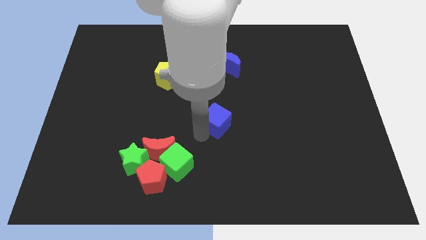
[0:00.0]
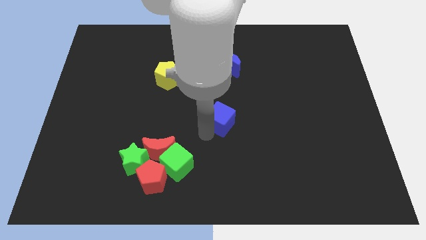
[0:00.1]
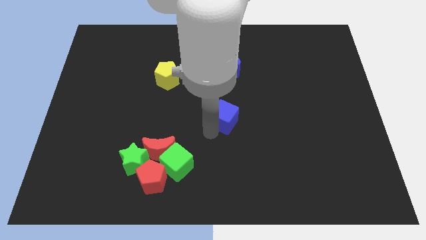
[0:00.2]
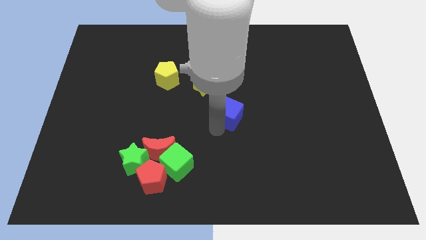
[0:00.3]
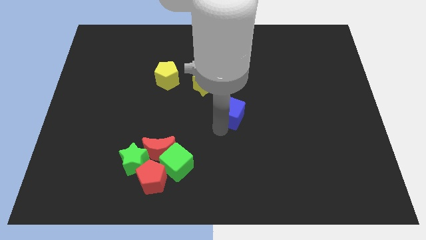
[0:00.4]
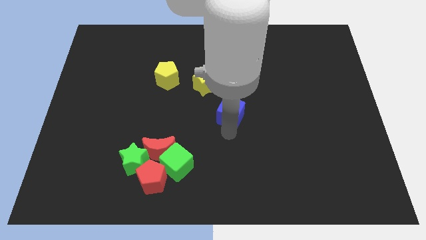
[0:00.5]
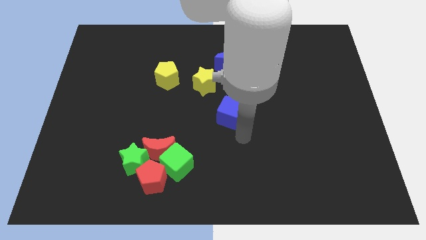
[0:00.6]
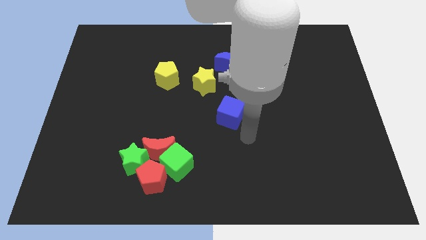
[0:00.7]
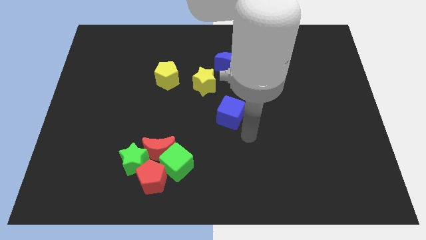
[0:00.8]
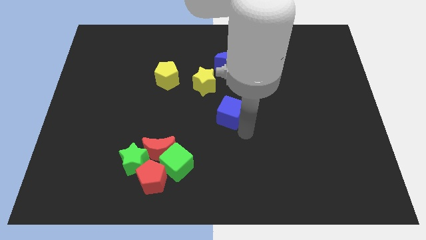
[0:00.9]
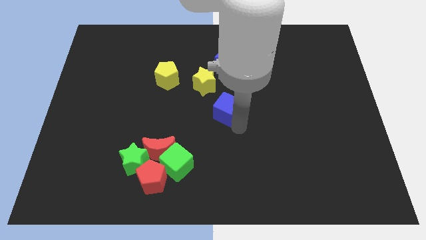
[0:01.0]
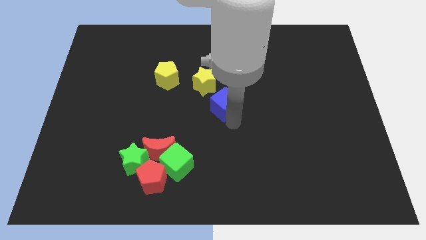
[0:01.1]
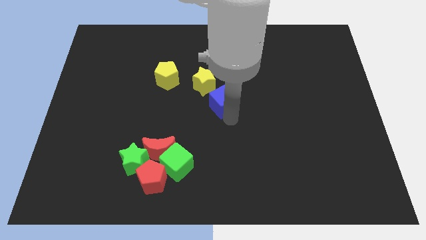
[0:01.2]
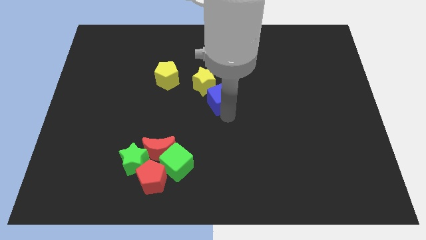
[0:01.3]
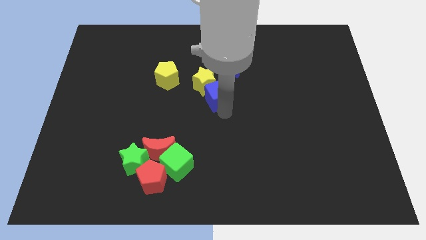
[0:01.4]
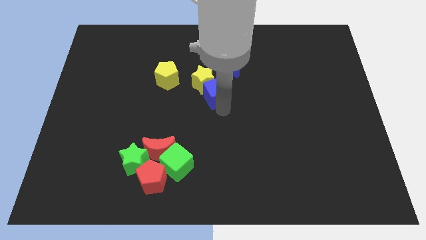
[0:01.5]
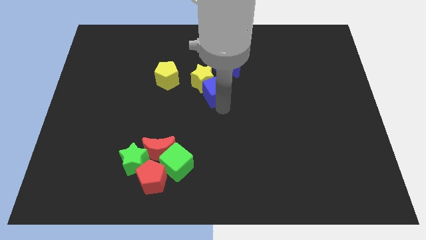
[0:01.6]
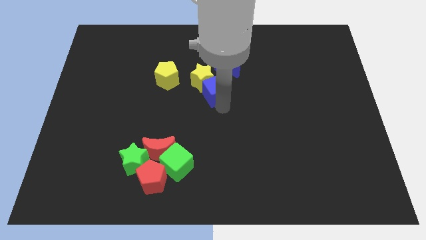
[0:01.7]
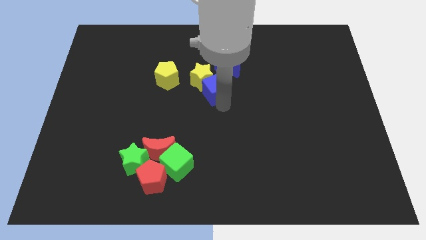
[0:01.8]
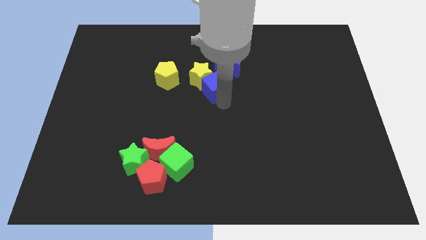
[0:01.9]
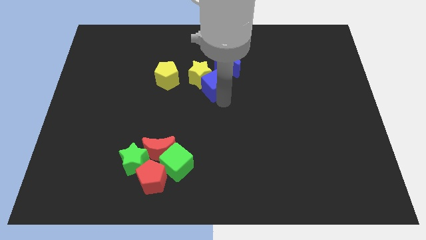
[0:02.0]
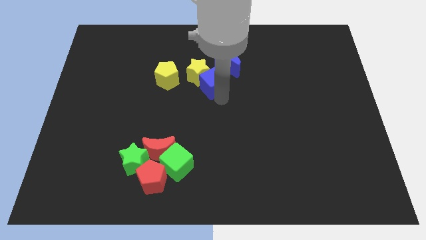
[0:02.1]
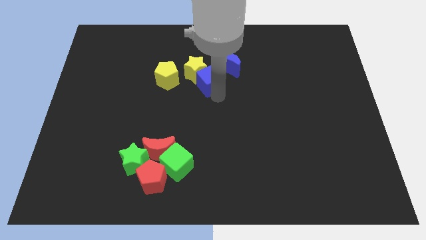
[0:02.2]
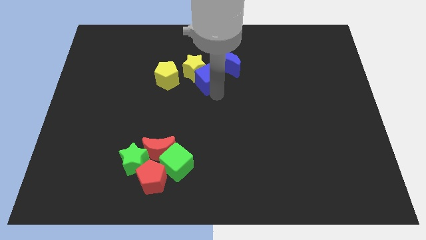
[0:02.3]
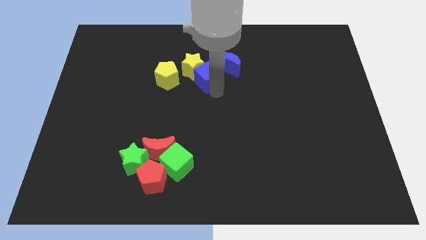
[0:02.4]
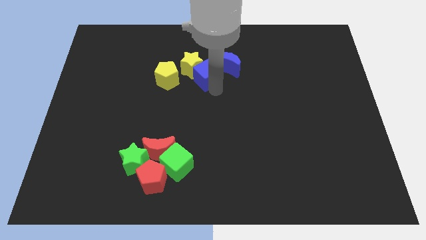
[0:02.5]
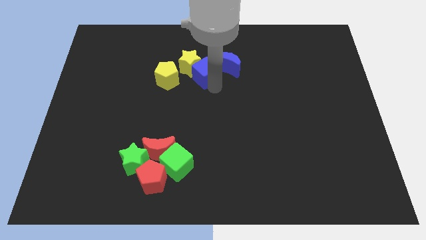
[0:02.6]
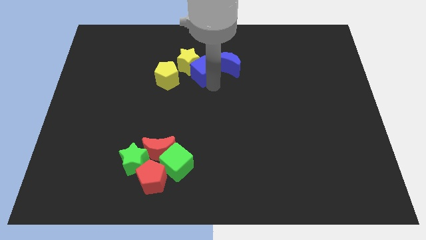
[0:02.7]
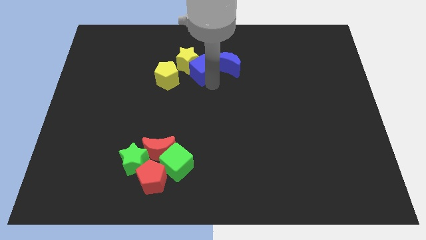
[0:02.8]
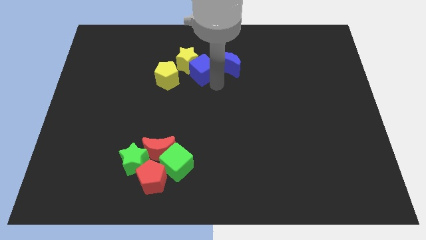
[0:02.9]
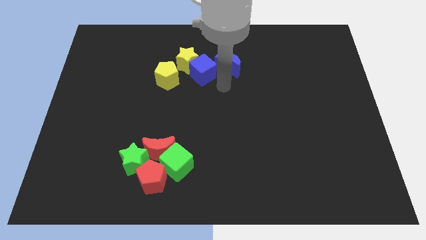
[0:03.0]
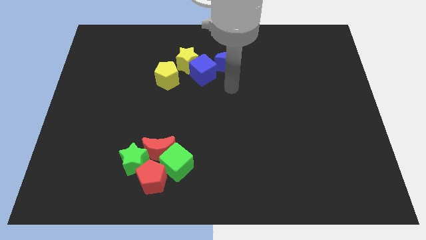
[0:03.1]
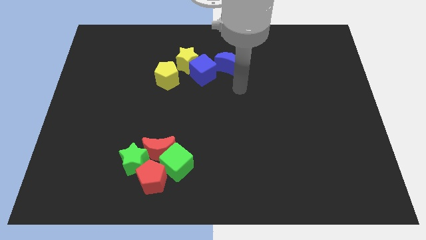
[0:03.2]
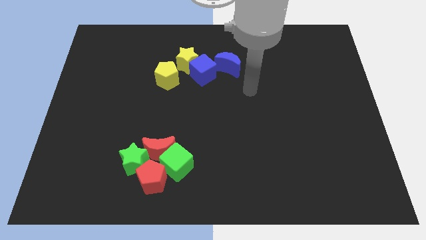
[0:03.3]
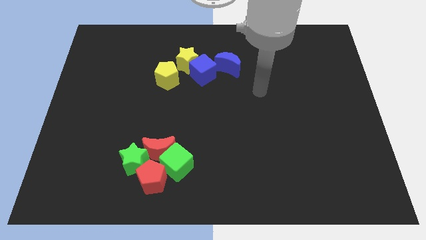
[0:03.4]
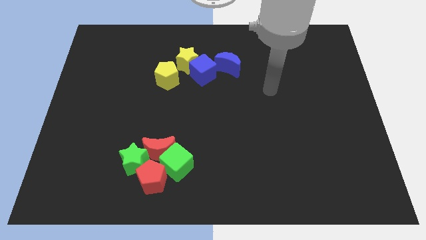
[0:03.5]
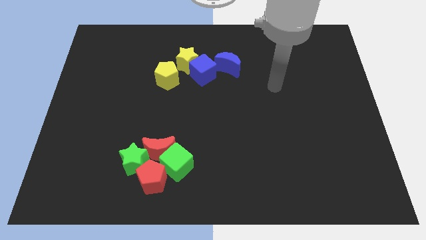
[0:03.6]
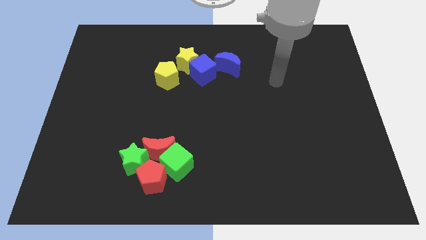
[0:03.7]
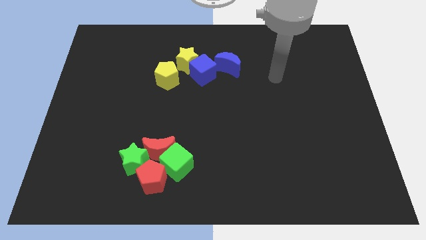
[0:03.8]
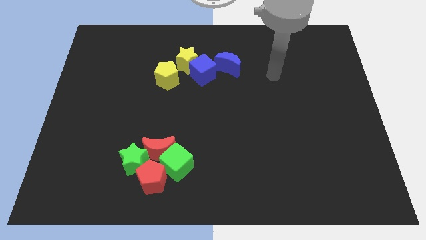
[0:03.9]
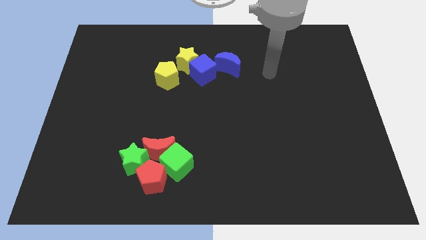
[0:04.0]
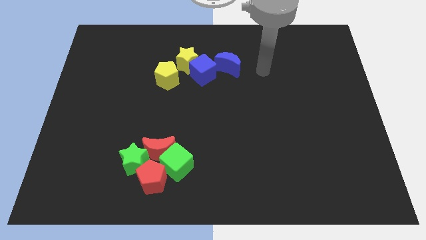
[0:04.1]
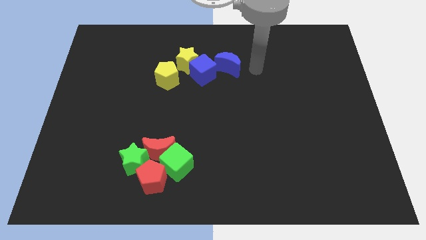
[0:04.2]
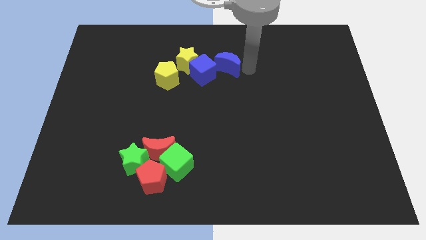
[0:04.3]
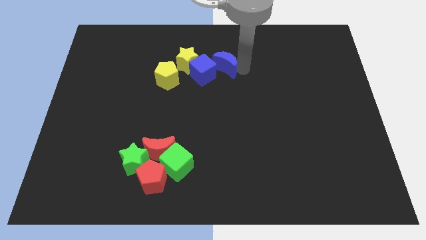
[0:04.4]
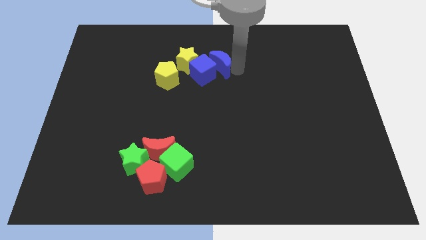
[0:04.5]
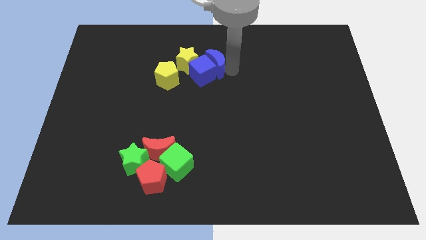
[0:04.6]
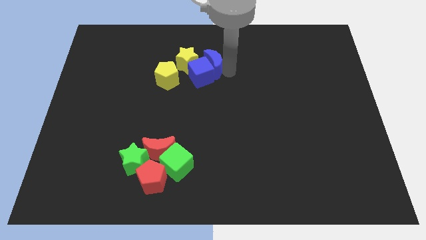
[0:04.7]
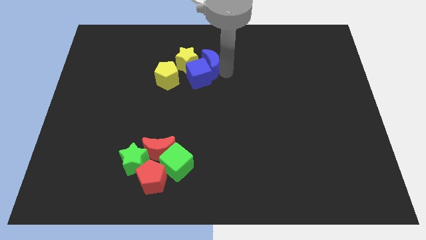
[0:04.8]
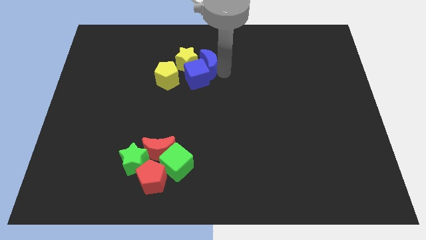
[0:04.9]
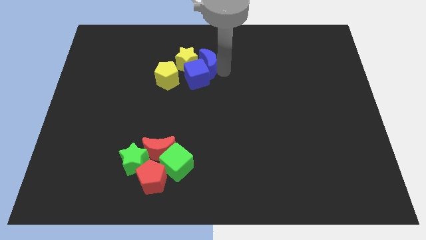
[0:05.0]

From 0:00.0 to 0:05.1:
place the blue cube along with blue crescent into yellow star

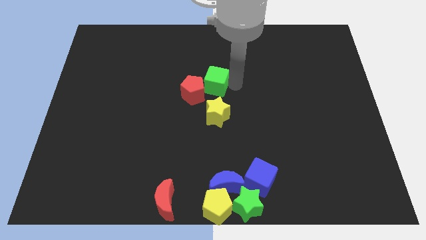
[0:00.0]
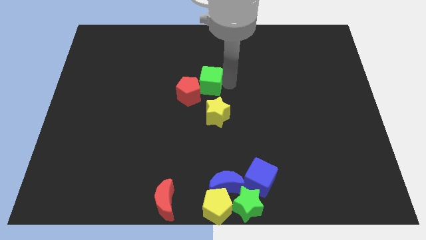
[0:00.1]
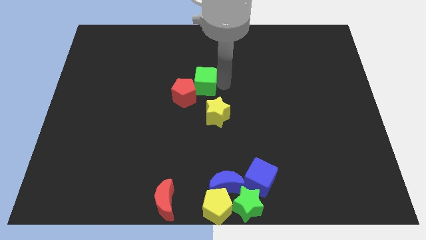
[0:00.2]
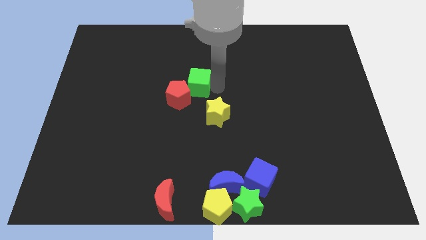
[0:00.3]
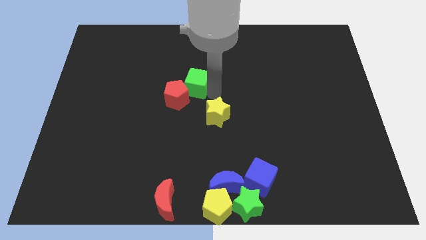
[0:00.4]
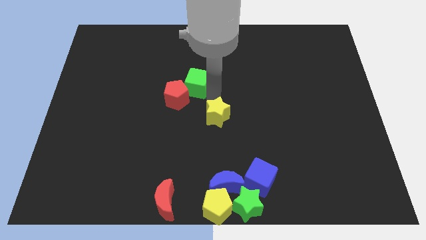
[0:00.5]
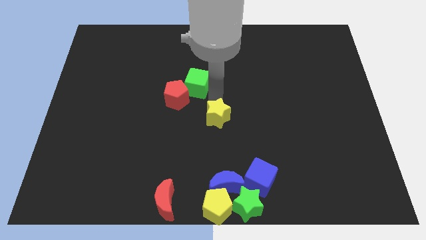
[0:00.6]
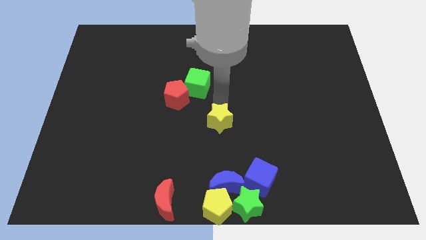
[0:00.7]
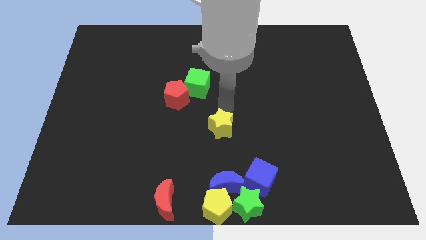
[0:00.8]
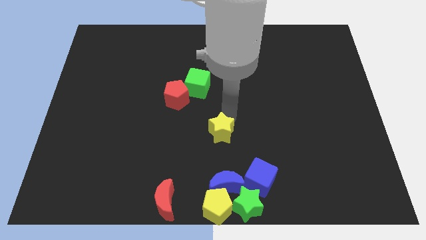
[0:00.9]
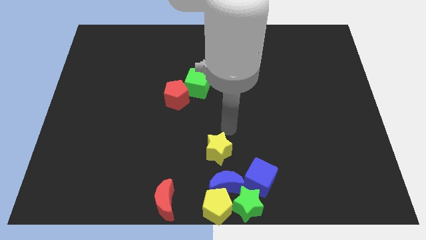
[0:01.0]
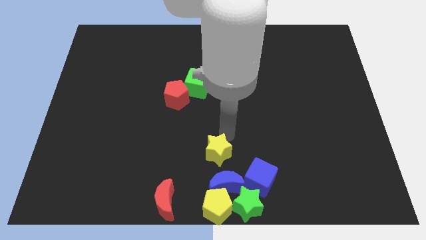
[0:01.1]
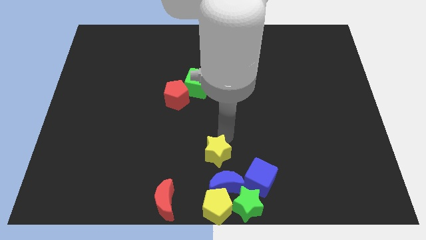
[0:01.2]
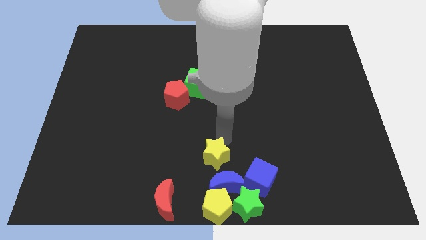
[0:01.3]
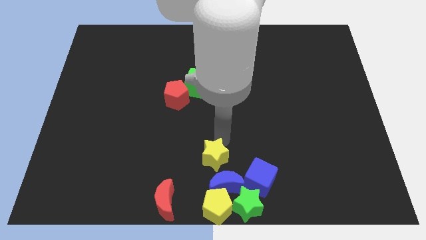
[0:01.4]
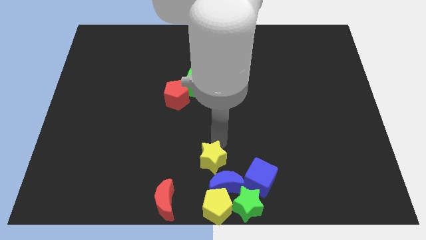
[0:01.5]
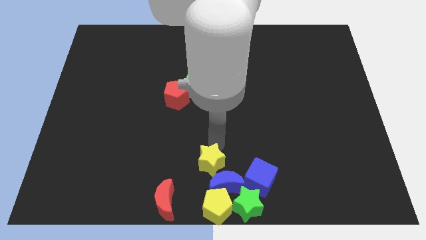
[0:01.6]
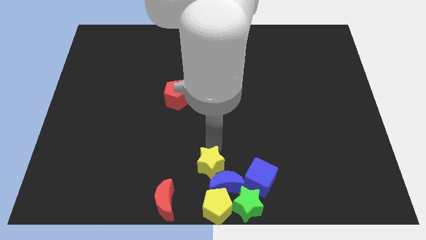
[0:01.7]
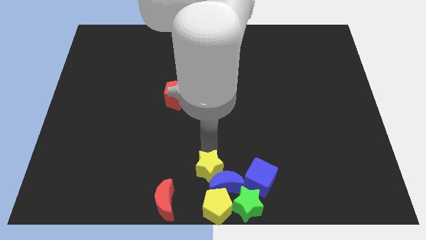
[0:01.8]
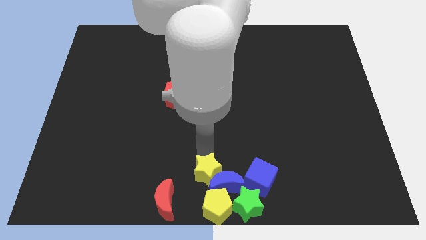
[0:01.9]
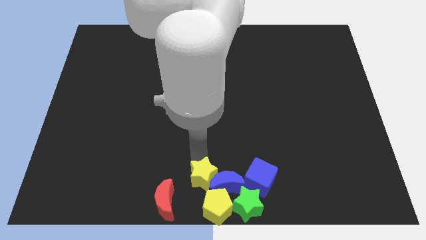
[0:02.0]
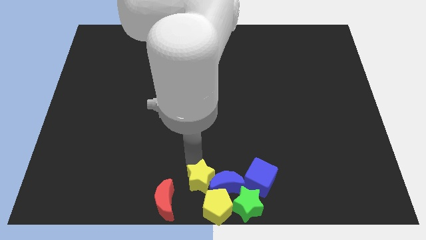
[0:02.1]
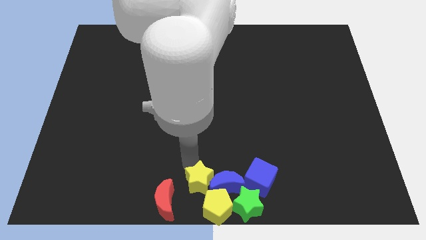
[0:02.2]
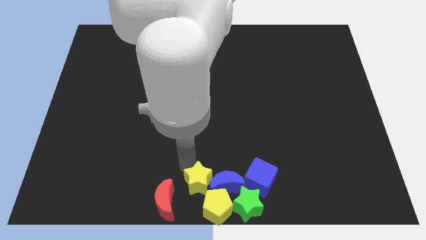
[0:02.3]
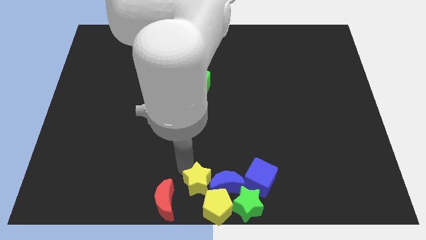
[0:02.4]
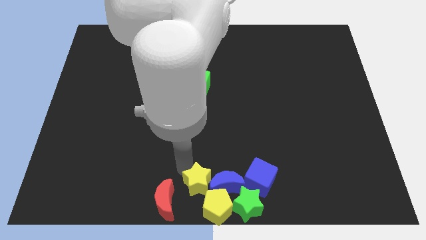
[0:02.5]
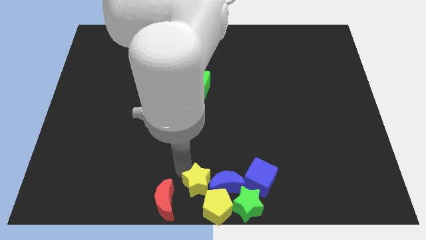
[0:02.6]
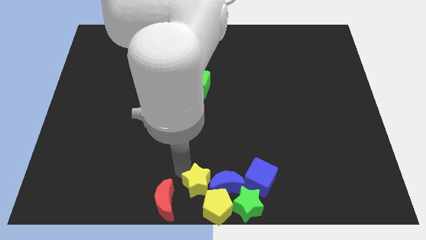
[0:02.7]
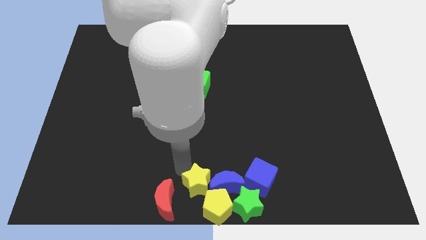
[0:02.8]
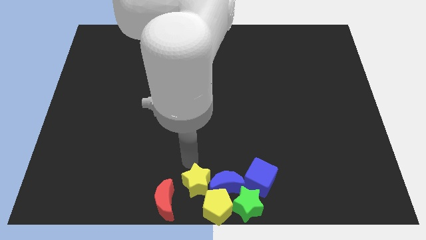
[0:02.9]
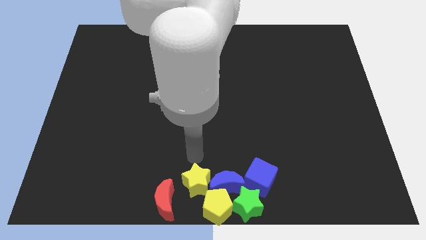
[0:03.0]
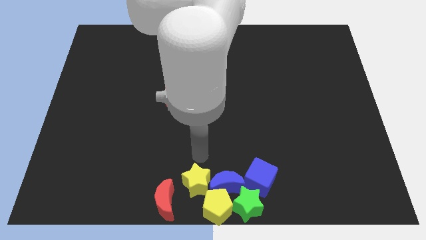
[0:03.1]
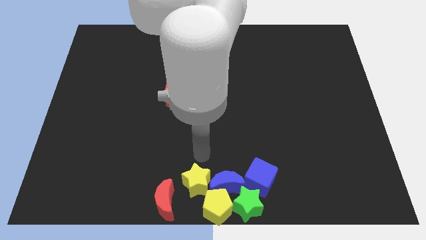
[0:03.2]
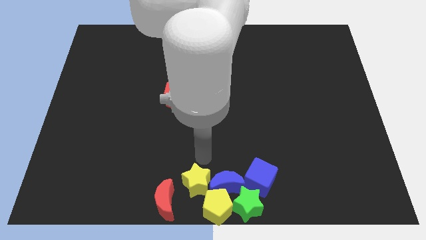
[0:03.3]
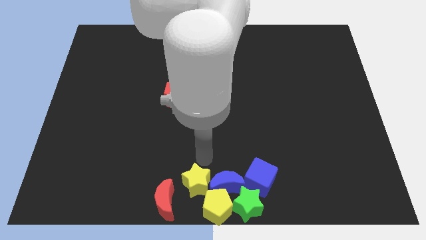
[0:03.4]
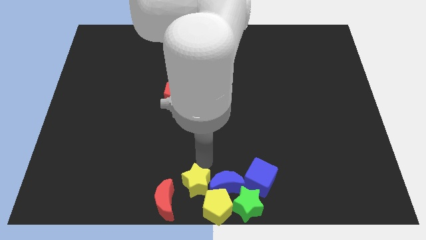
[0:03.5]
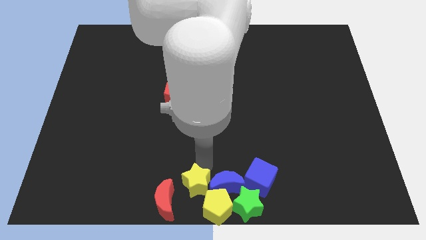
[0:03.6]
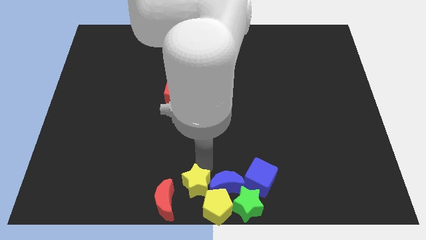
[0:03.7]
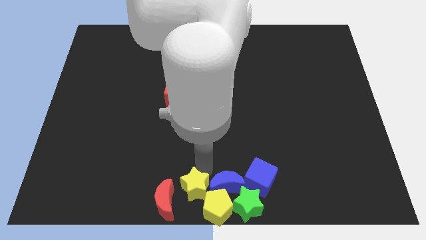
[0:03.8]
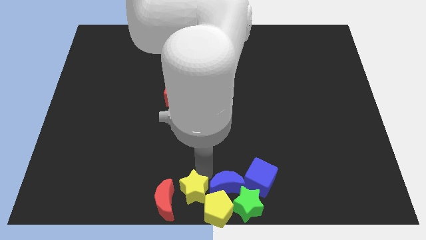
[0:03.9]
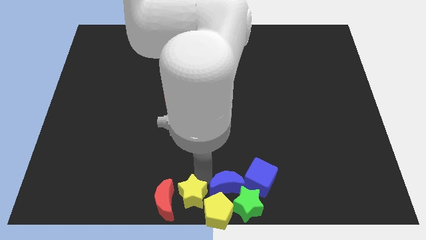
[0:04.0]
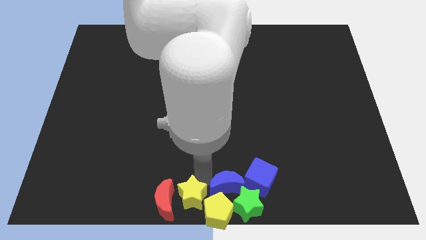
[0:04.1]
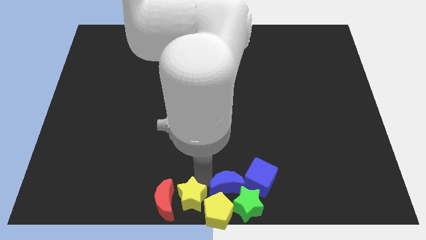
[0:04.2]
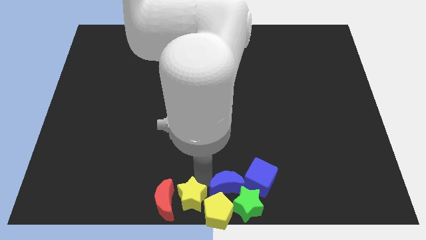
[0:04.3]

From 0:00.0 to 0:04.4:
push the yellow star into the yellow pentagon
